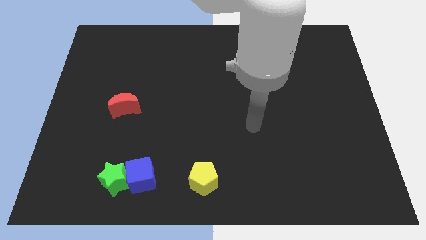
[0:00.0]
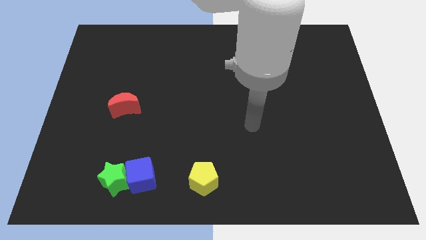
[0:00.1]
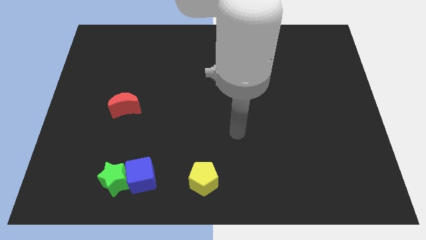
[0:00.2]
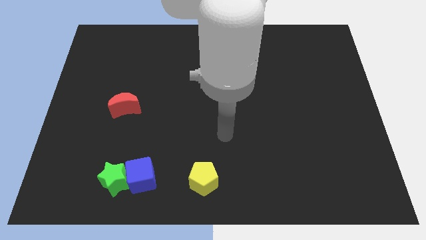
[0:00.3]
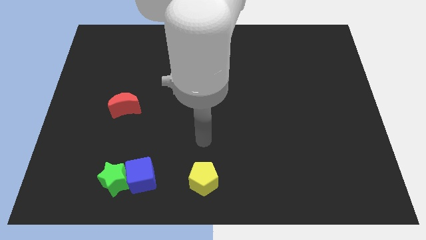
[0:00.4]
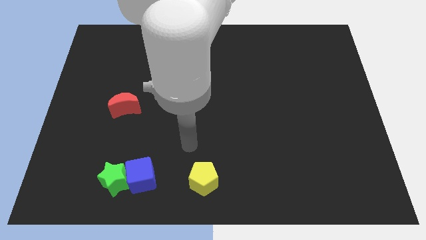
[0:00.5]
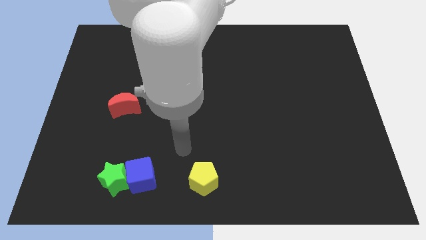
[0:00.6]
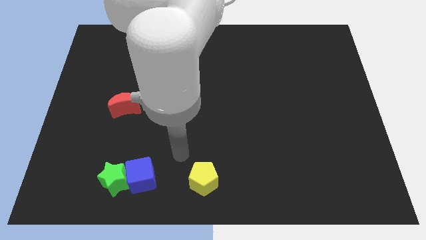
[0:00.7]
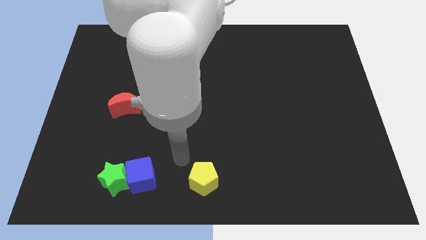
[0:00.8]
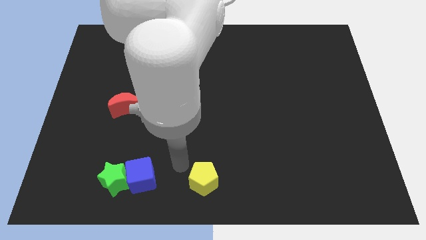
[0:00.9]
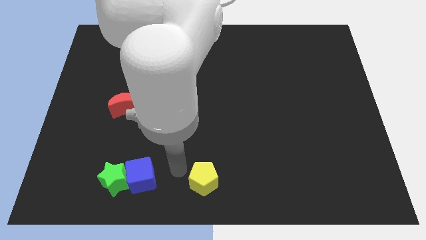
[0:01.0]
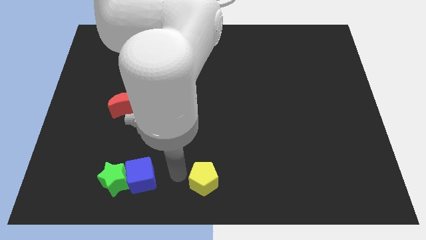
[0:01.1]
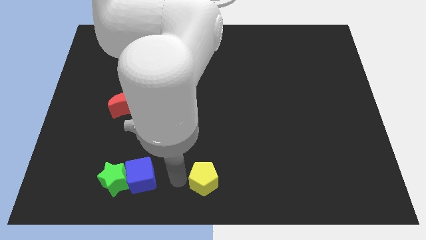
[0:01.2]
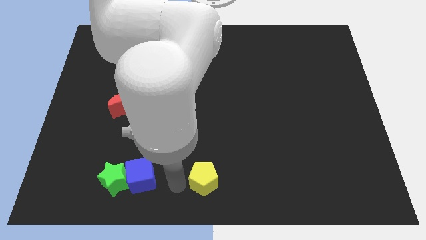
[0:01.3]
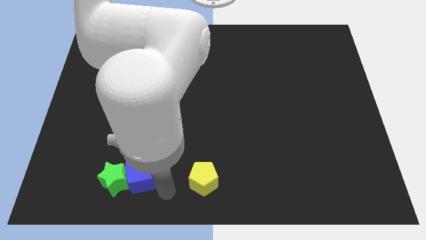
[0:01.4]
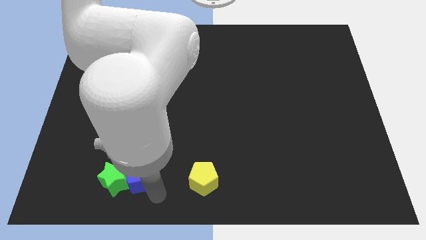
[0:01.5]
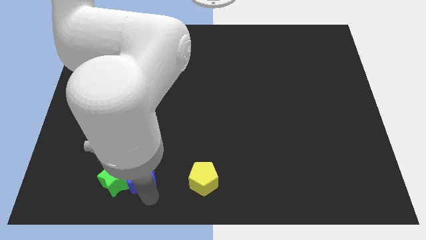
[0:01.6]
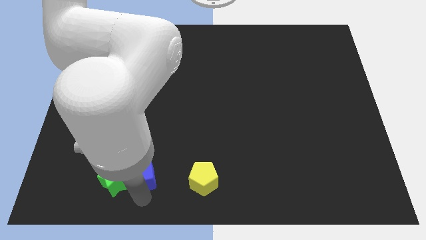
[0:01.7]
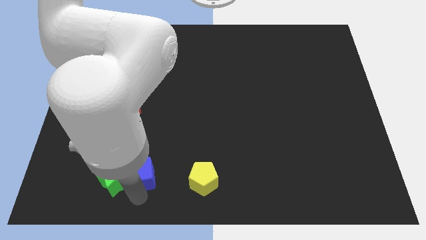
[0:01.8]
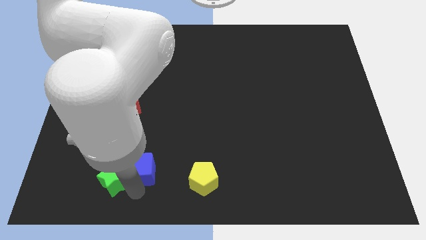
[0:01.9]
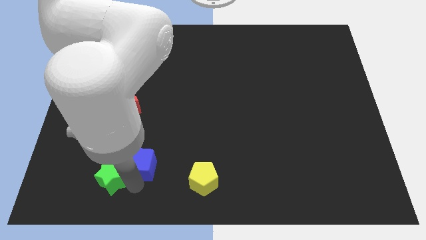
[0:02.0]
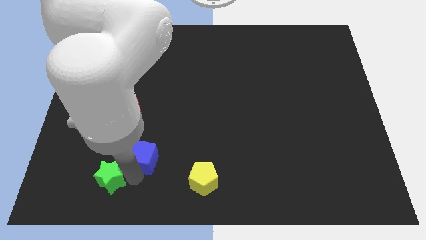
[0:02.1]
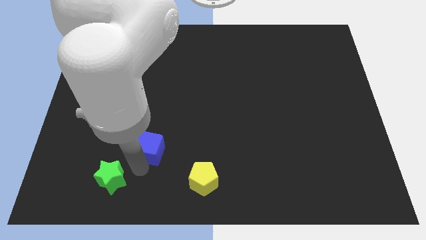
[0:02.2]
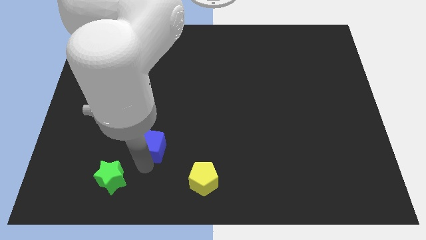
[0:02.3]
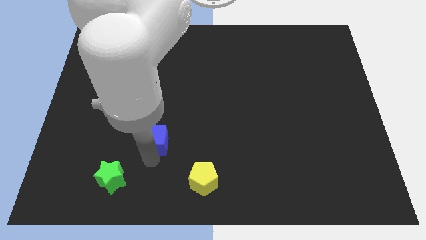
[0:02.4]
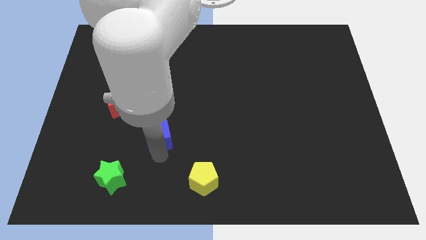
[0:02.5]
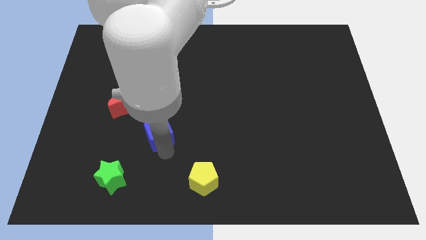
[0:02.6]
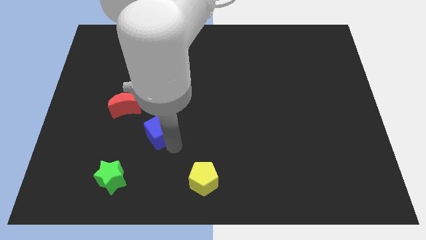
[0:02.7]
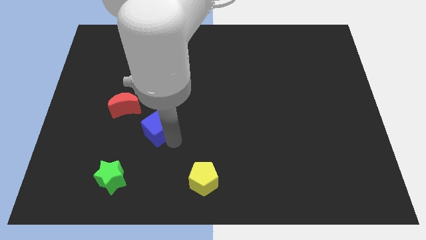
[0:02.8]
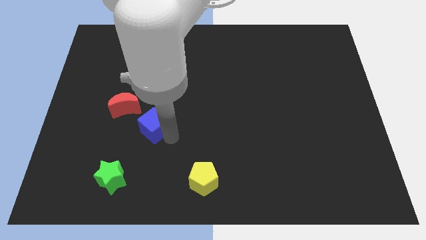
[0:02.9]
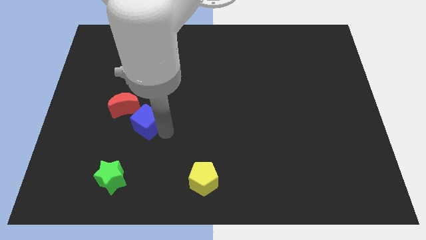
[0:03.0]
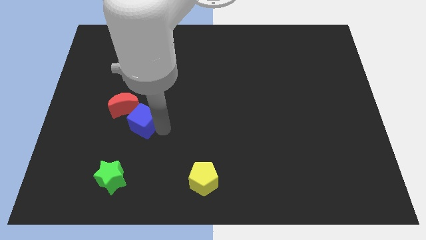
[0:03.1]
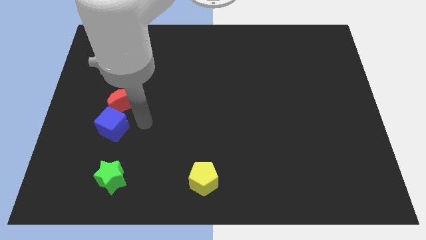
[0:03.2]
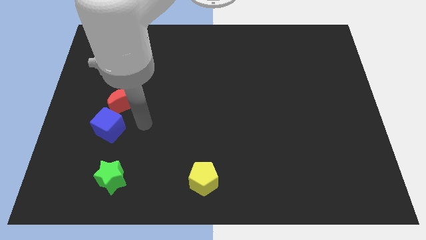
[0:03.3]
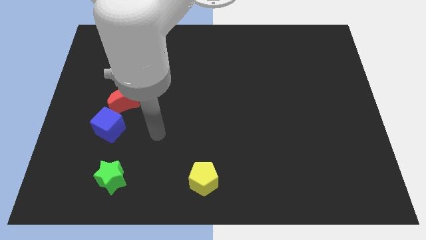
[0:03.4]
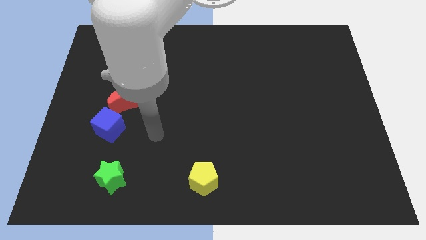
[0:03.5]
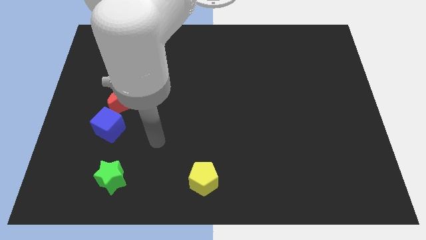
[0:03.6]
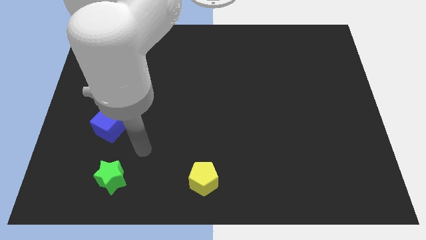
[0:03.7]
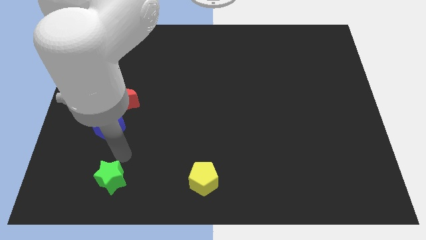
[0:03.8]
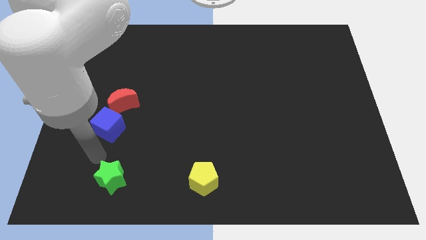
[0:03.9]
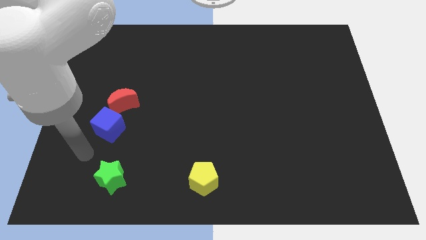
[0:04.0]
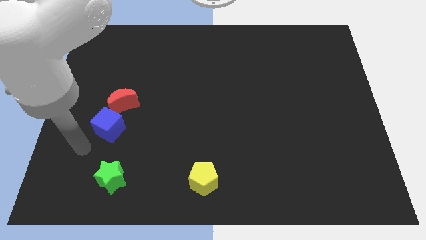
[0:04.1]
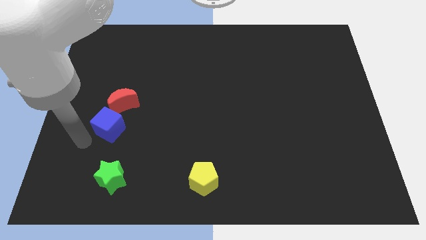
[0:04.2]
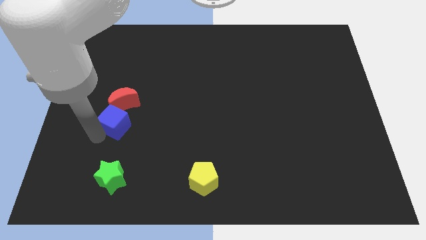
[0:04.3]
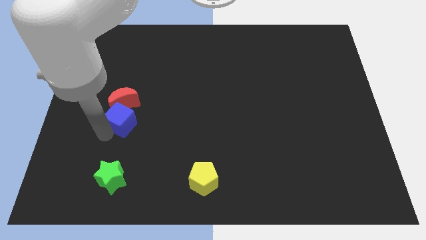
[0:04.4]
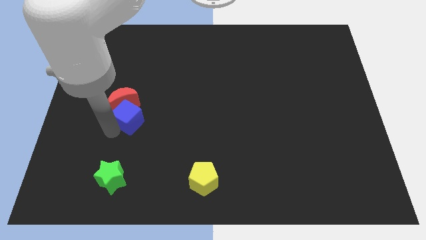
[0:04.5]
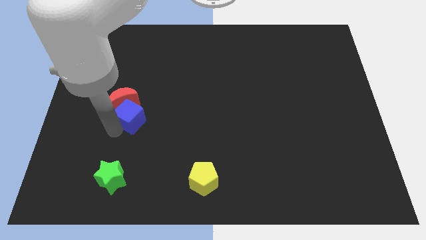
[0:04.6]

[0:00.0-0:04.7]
push the blue block towards the moon

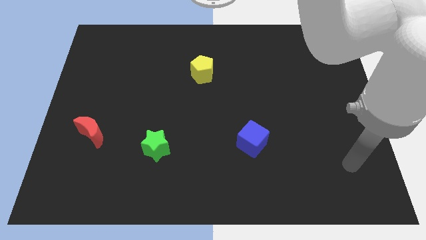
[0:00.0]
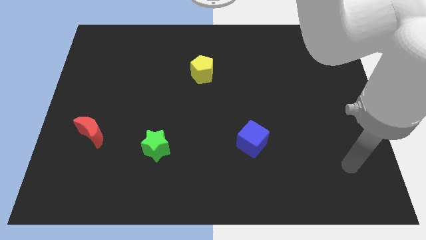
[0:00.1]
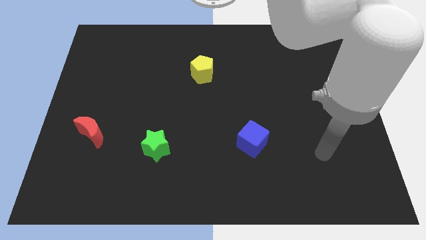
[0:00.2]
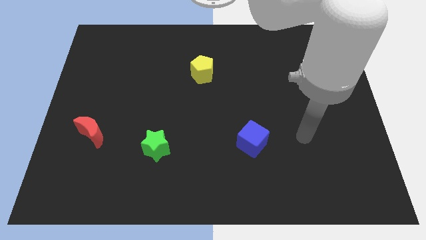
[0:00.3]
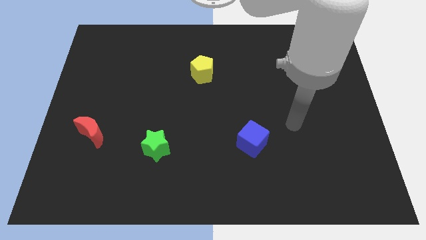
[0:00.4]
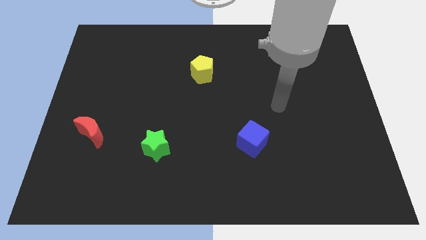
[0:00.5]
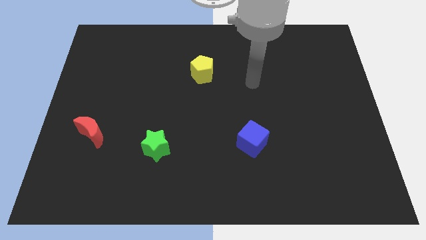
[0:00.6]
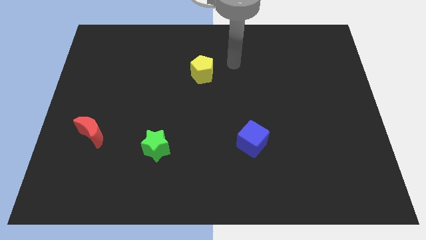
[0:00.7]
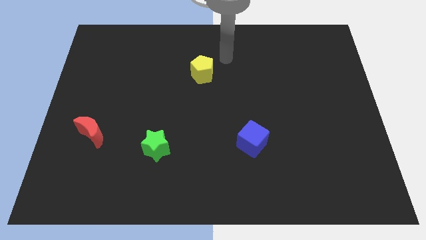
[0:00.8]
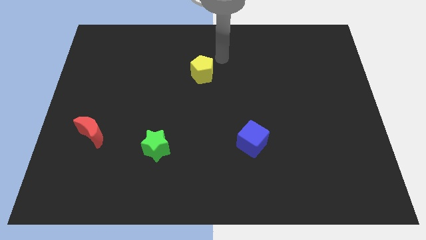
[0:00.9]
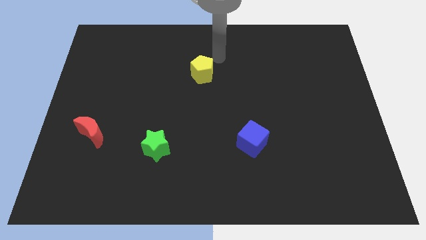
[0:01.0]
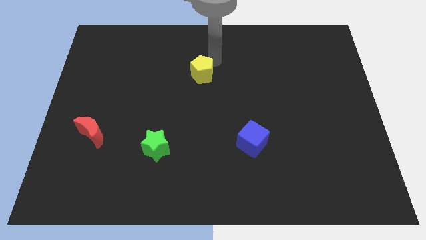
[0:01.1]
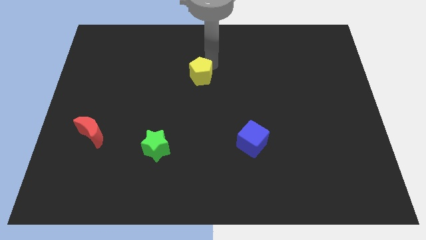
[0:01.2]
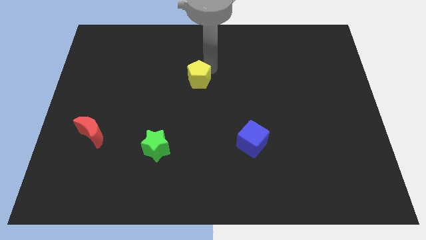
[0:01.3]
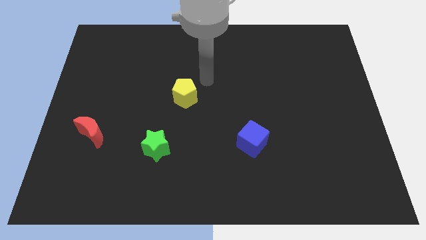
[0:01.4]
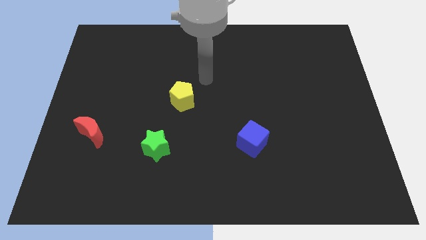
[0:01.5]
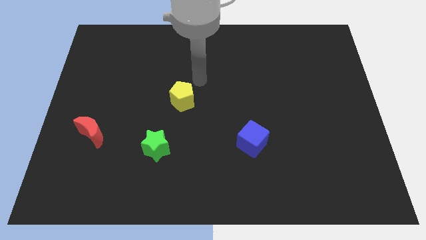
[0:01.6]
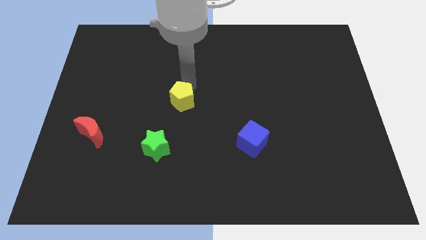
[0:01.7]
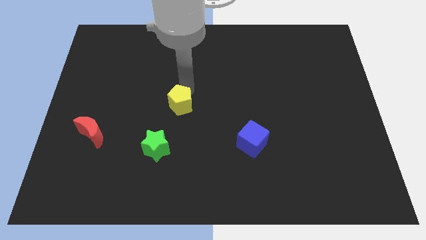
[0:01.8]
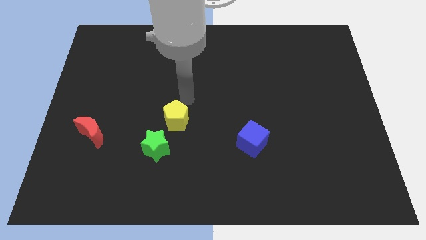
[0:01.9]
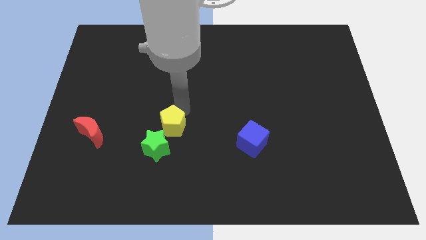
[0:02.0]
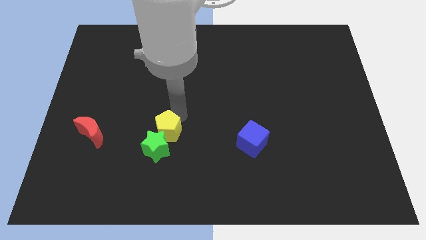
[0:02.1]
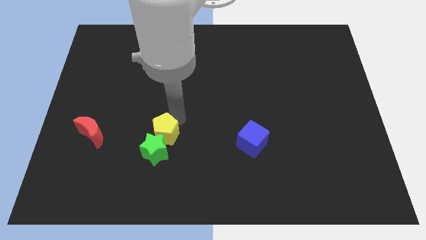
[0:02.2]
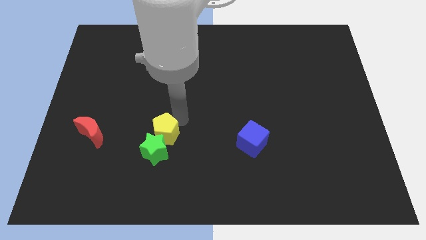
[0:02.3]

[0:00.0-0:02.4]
push the yellow block close to the green star

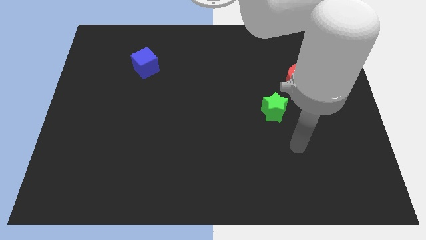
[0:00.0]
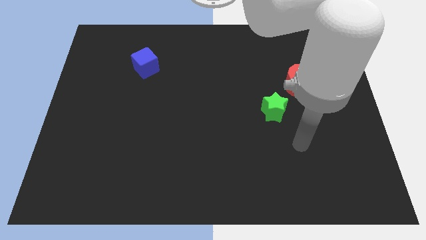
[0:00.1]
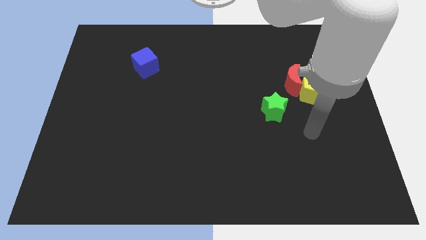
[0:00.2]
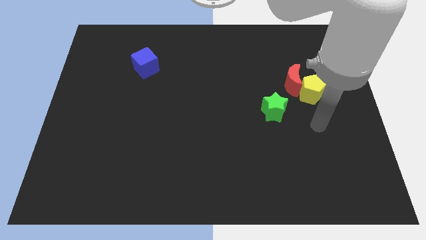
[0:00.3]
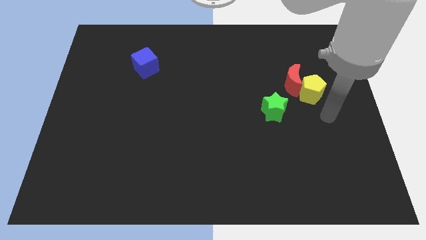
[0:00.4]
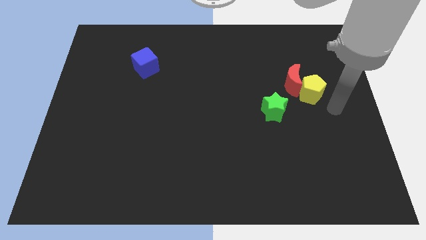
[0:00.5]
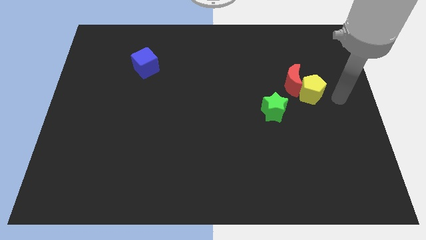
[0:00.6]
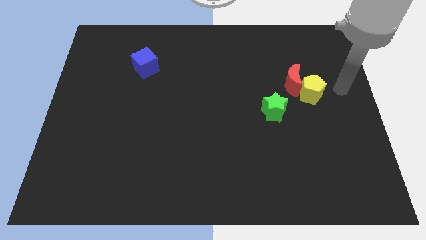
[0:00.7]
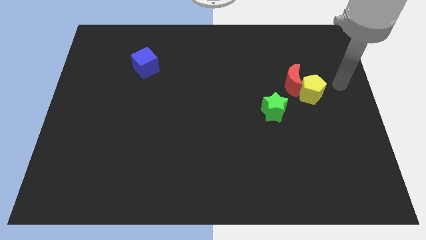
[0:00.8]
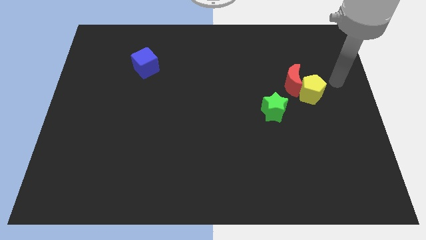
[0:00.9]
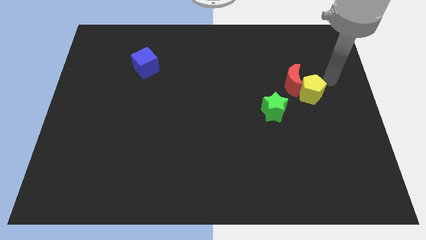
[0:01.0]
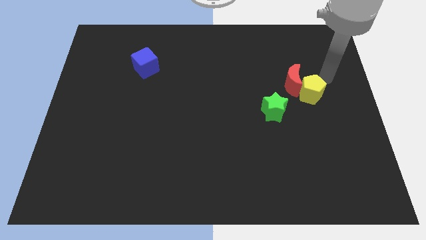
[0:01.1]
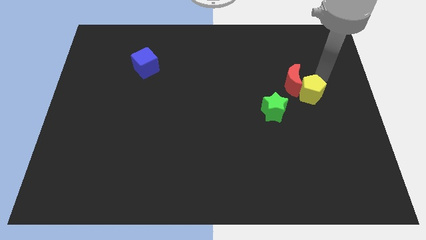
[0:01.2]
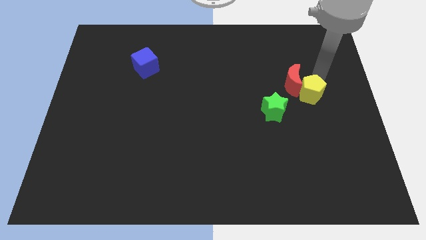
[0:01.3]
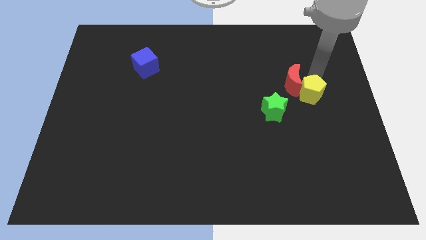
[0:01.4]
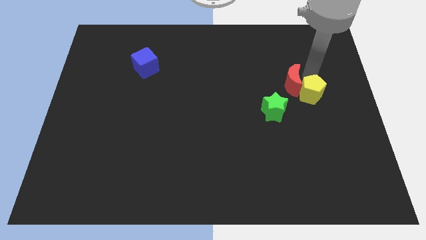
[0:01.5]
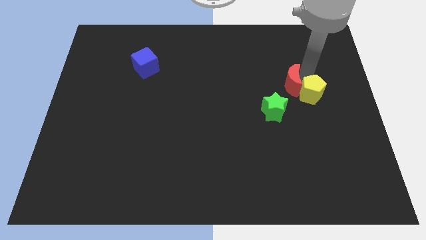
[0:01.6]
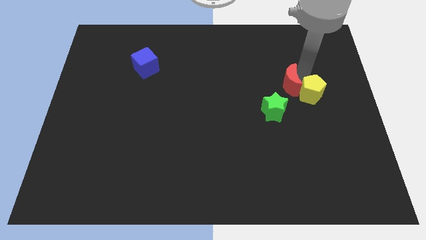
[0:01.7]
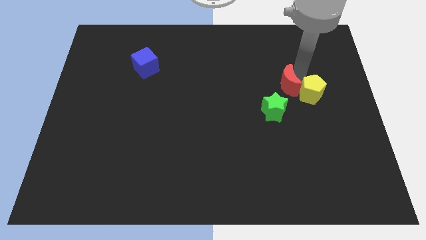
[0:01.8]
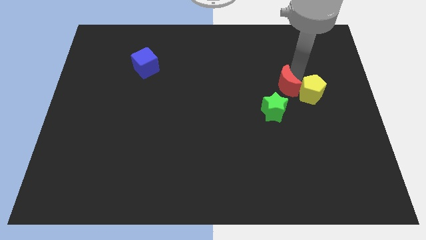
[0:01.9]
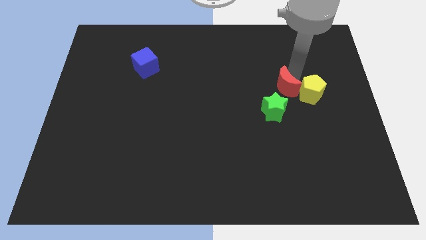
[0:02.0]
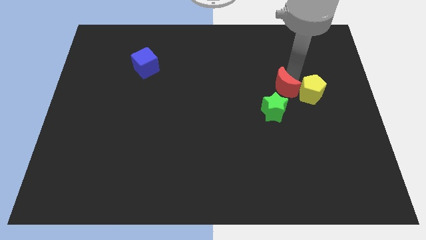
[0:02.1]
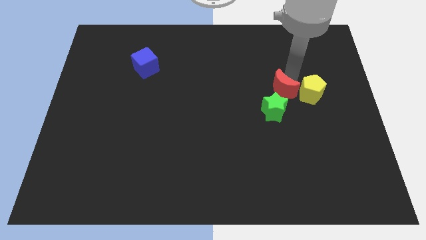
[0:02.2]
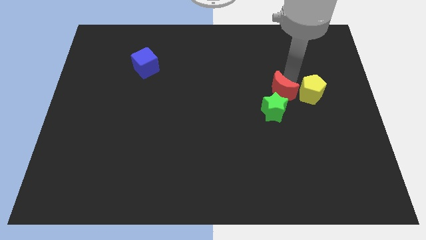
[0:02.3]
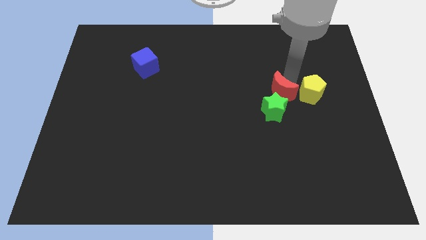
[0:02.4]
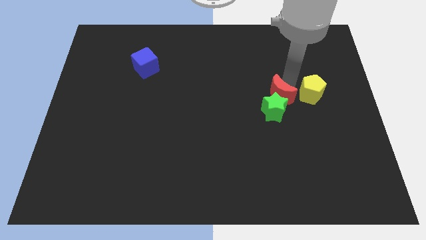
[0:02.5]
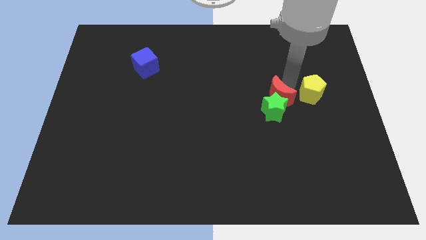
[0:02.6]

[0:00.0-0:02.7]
slide the red moon to the green block
